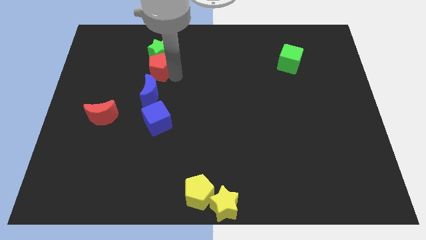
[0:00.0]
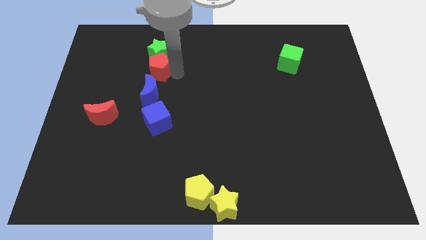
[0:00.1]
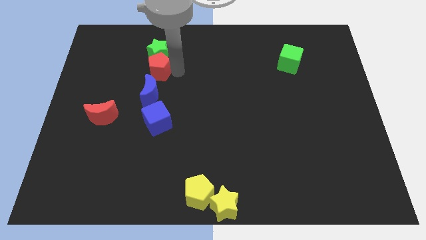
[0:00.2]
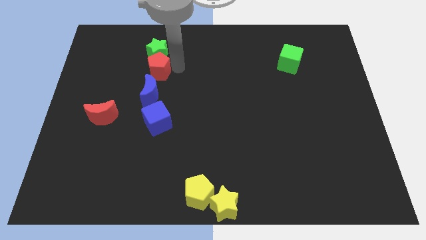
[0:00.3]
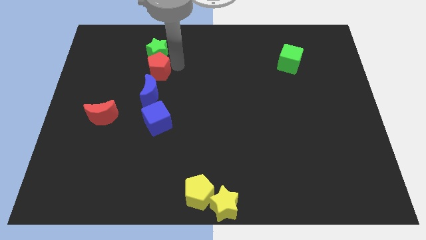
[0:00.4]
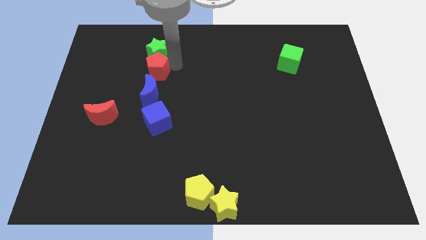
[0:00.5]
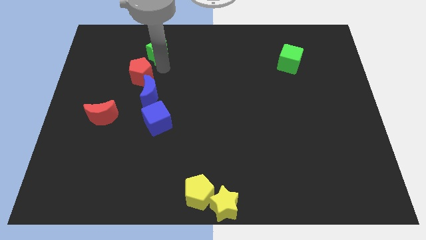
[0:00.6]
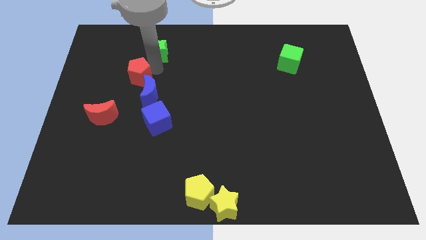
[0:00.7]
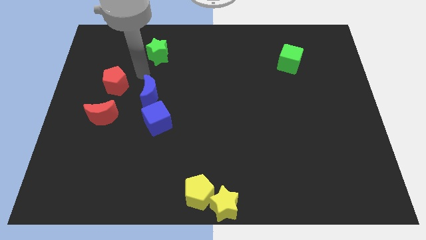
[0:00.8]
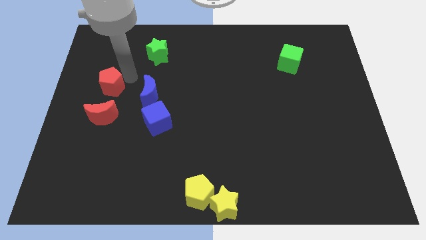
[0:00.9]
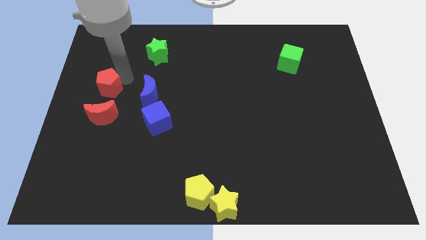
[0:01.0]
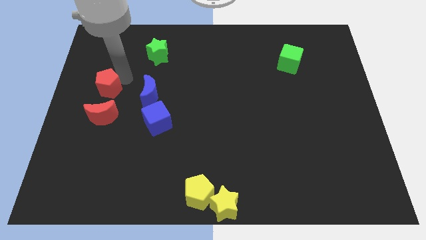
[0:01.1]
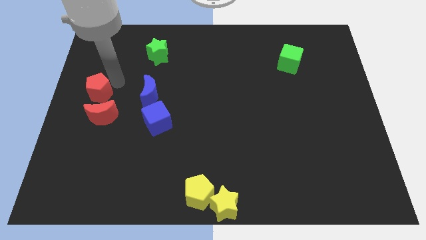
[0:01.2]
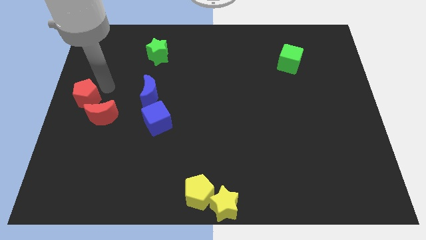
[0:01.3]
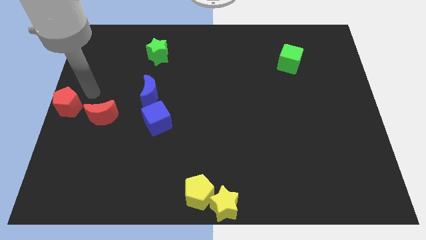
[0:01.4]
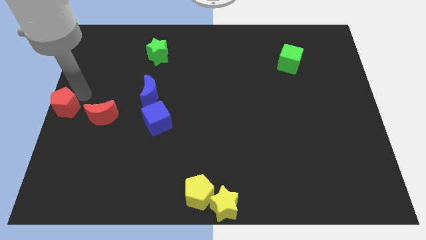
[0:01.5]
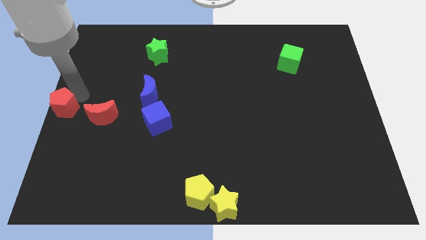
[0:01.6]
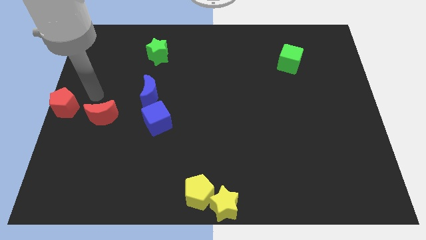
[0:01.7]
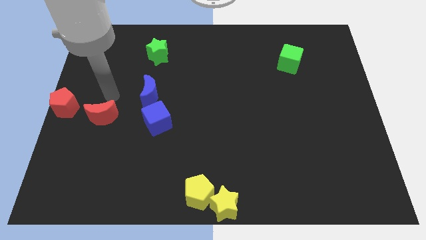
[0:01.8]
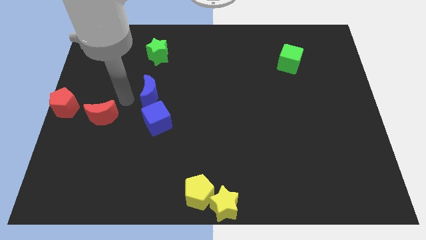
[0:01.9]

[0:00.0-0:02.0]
push the red pentagon to the center left side of the board

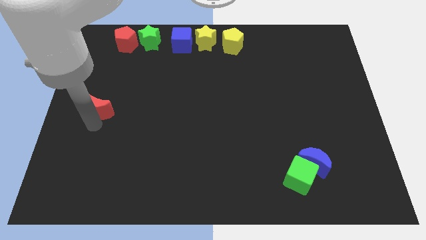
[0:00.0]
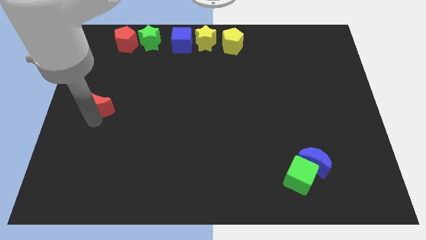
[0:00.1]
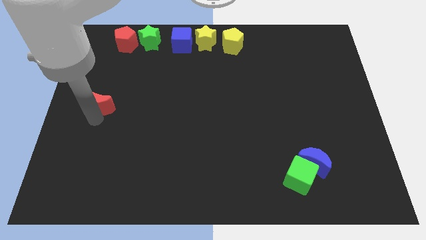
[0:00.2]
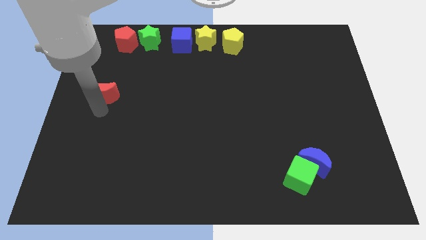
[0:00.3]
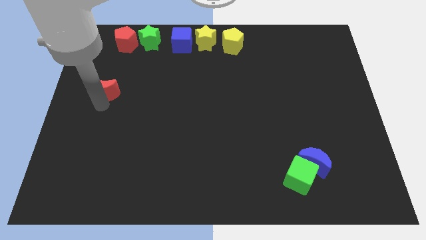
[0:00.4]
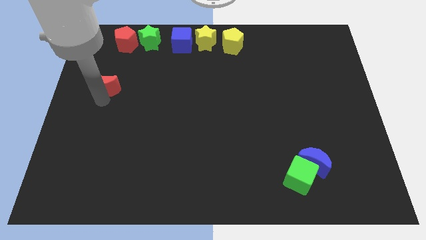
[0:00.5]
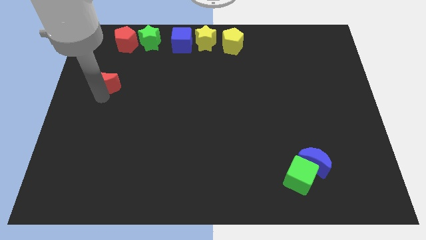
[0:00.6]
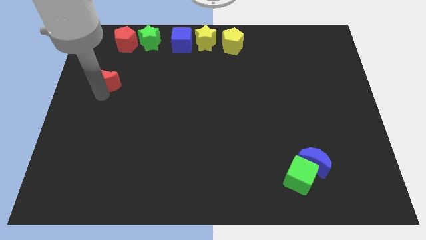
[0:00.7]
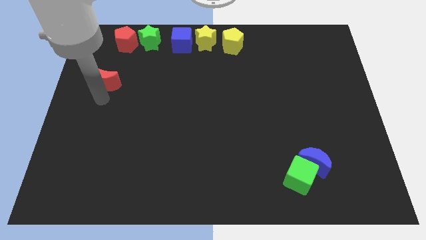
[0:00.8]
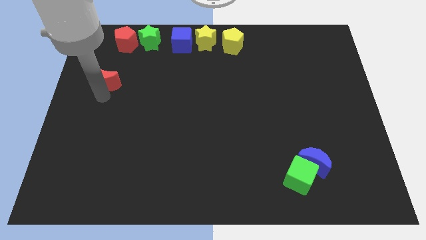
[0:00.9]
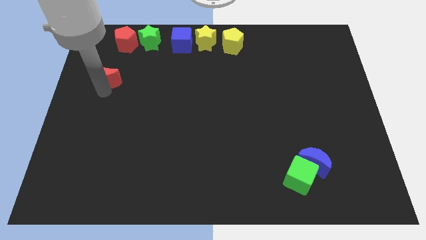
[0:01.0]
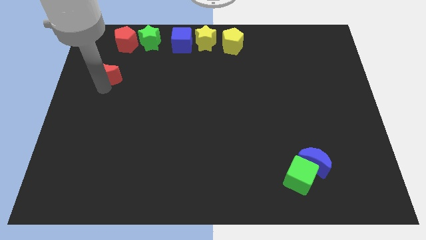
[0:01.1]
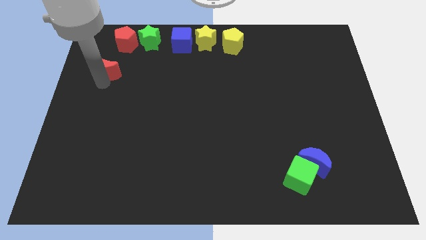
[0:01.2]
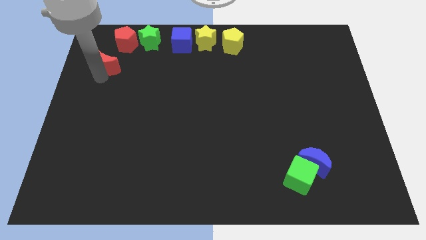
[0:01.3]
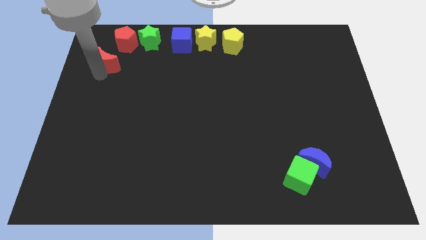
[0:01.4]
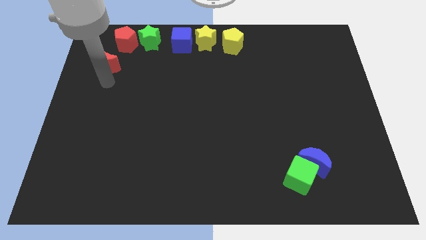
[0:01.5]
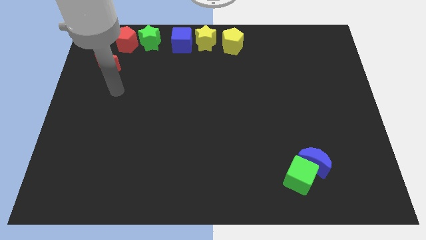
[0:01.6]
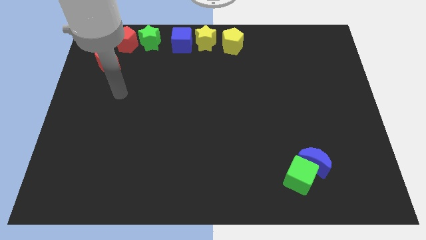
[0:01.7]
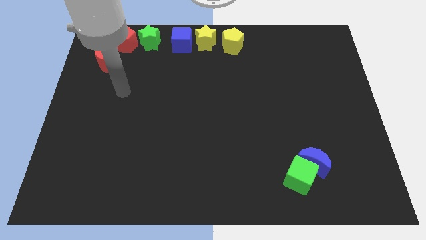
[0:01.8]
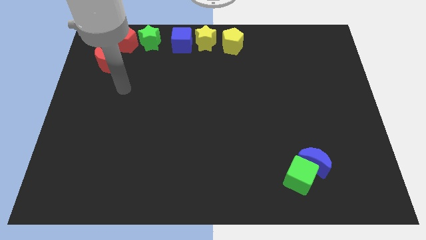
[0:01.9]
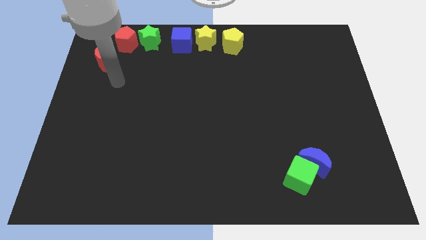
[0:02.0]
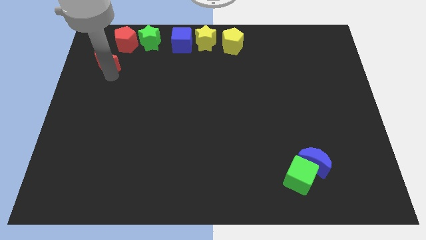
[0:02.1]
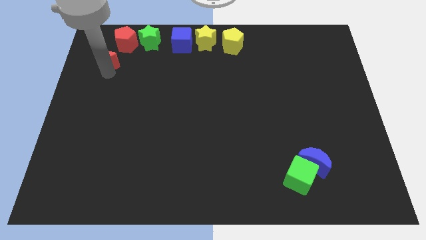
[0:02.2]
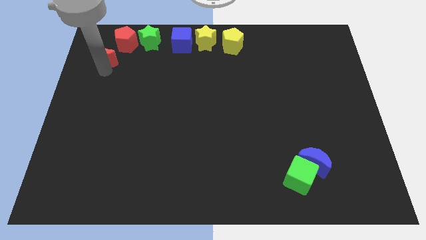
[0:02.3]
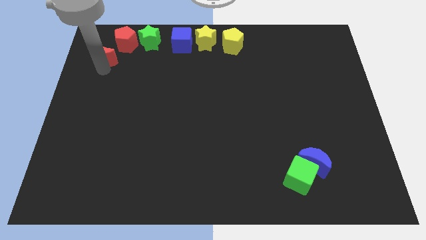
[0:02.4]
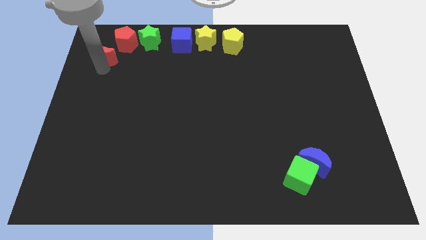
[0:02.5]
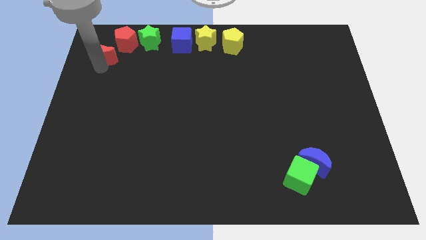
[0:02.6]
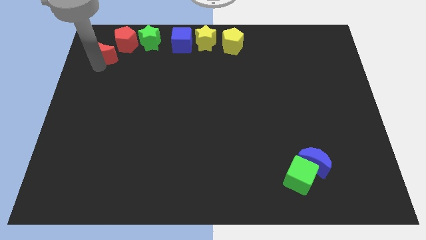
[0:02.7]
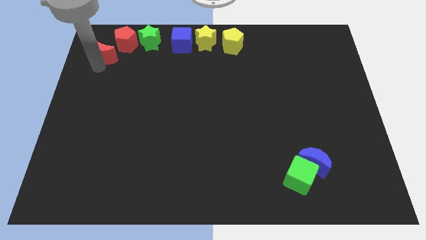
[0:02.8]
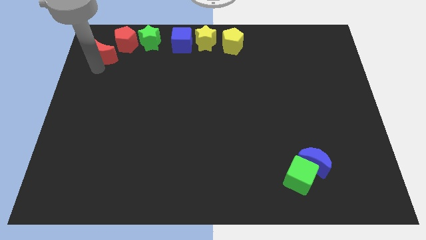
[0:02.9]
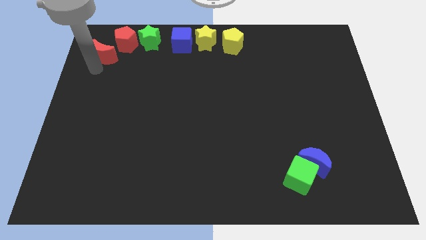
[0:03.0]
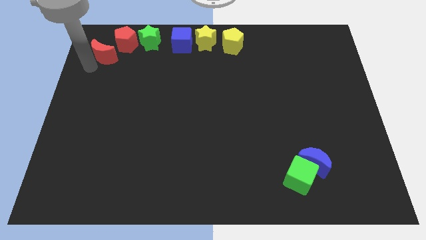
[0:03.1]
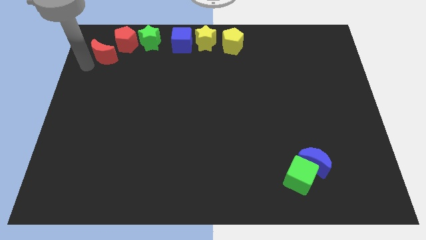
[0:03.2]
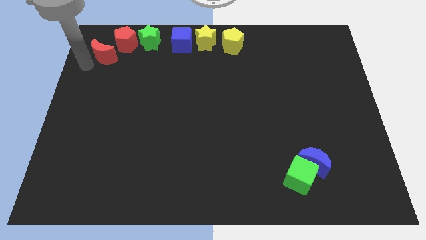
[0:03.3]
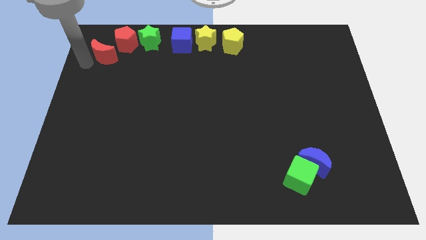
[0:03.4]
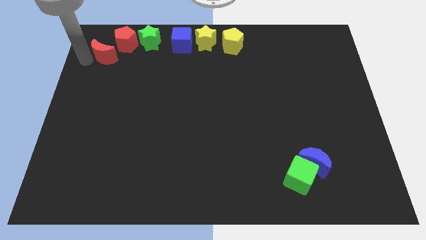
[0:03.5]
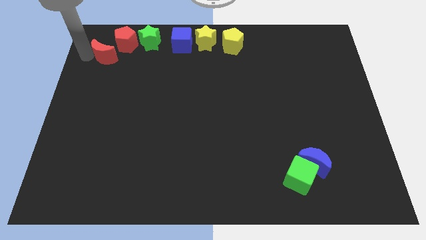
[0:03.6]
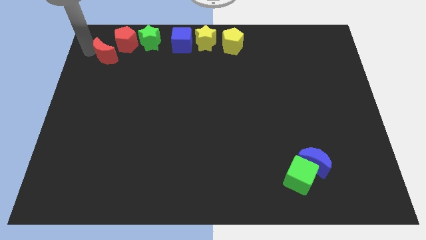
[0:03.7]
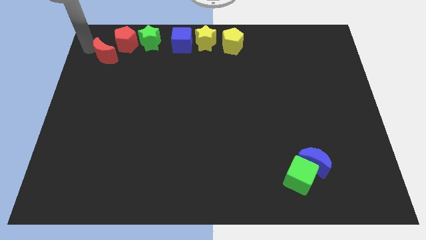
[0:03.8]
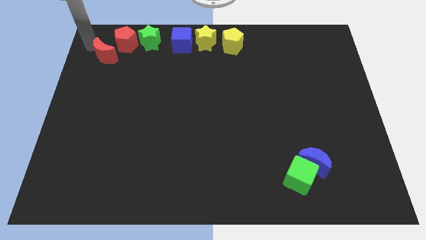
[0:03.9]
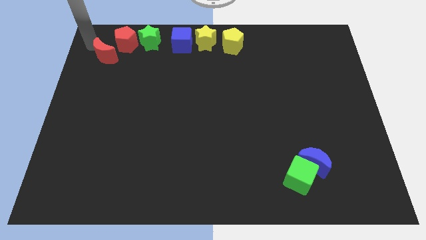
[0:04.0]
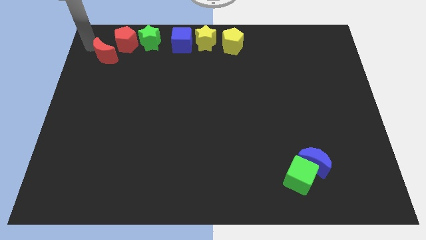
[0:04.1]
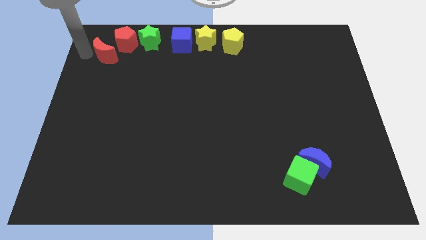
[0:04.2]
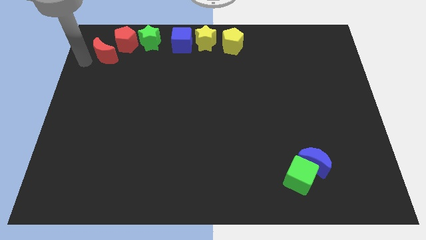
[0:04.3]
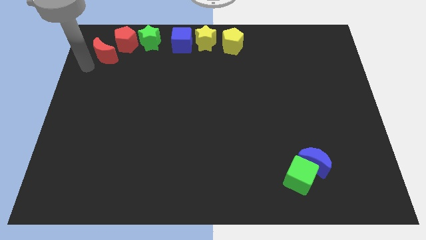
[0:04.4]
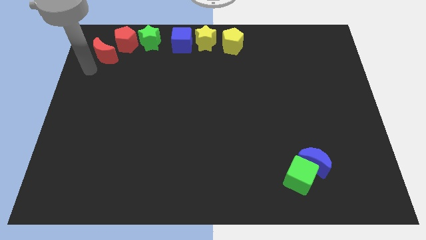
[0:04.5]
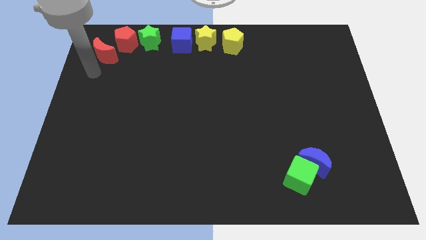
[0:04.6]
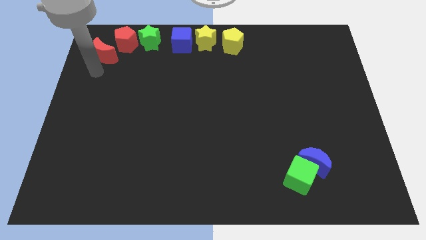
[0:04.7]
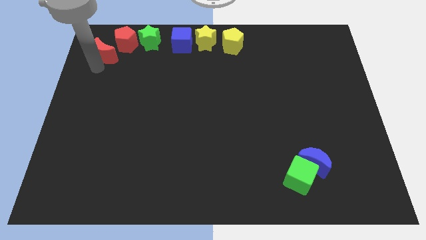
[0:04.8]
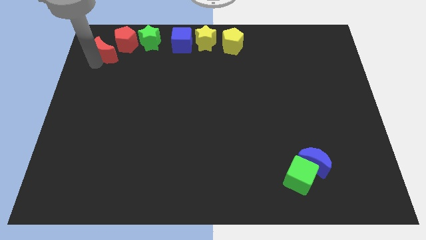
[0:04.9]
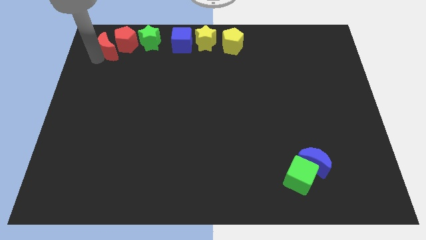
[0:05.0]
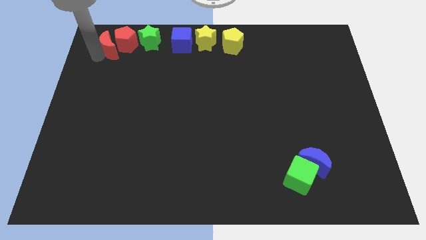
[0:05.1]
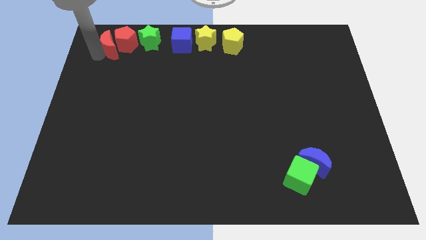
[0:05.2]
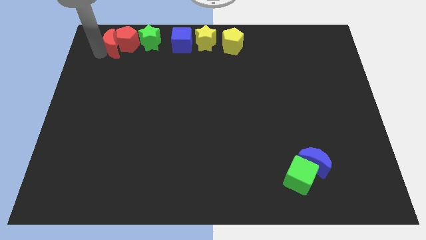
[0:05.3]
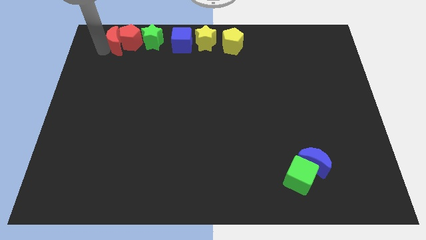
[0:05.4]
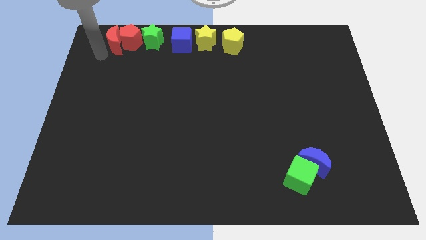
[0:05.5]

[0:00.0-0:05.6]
push the red moon to the left of the red pentagon

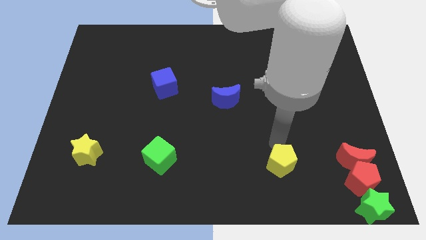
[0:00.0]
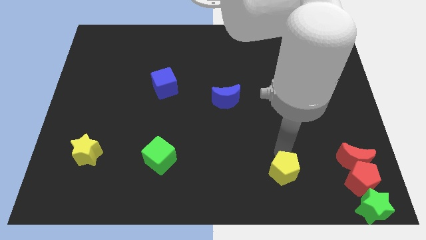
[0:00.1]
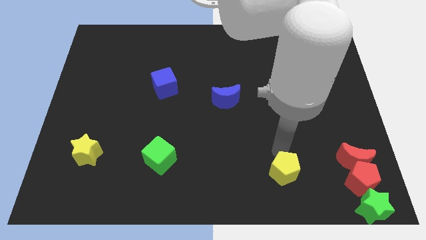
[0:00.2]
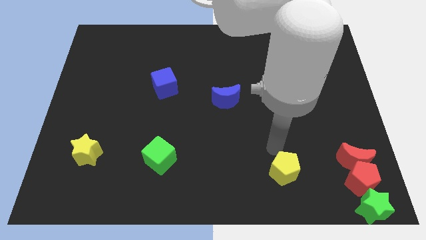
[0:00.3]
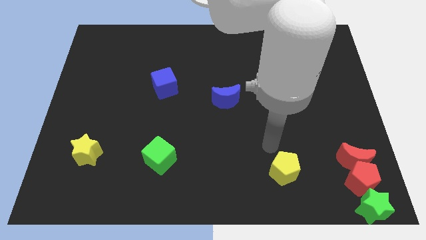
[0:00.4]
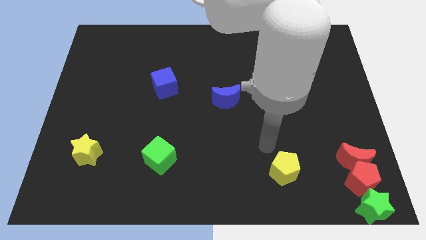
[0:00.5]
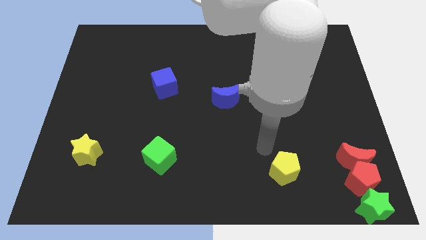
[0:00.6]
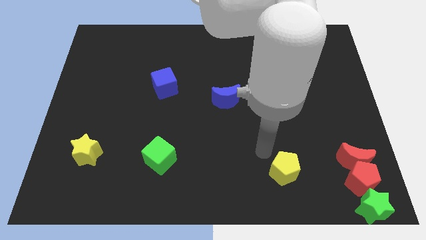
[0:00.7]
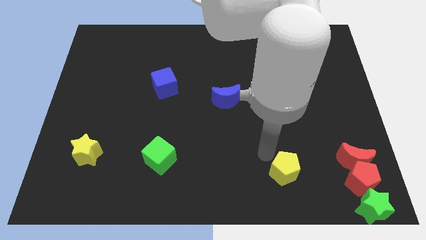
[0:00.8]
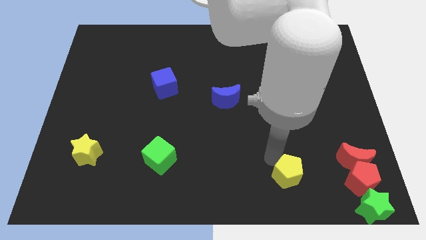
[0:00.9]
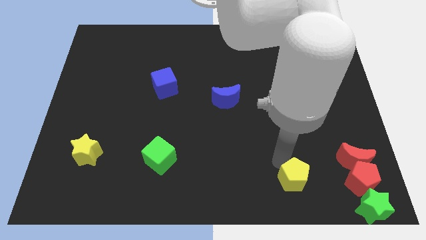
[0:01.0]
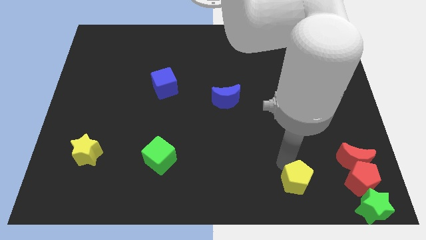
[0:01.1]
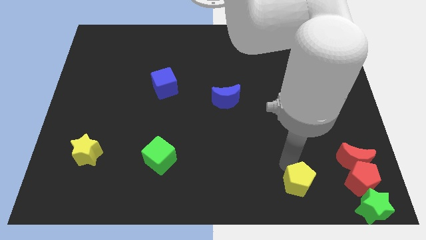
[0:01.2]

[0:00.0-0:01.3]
place the yellow pentagon to the left side of the red pentagon
